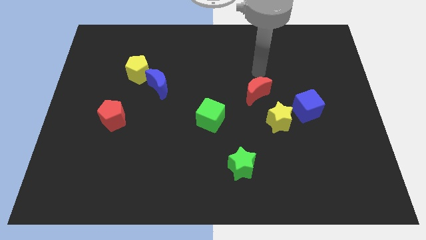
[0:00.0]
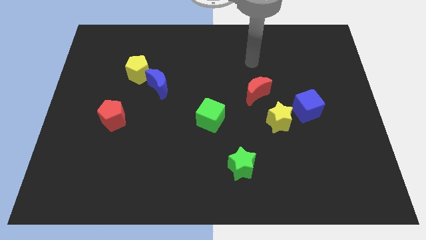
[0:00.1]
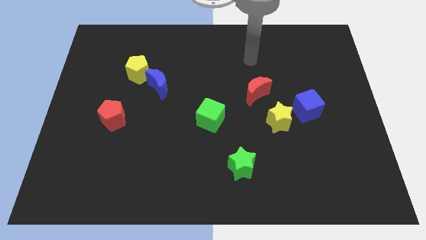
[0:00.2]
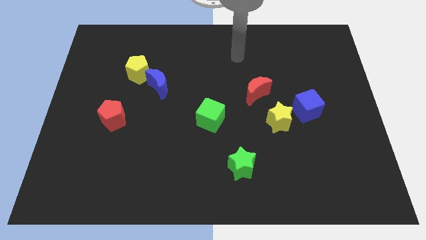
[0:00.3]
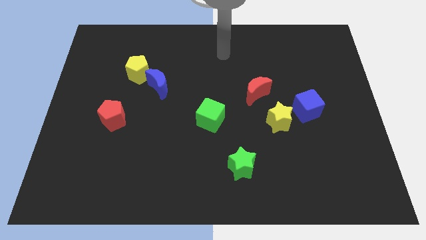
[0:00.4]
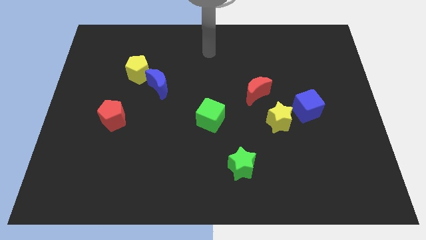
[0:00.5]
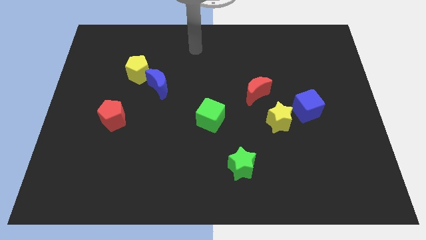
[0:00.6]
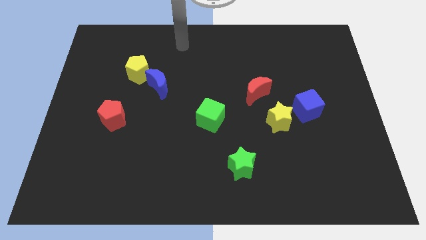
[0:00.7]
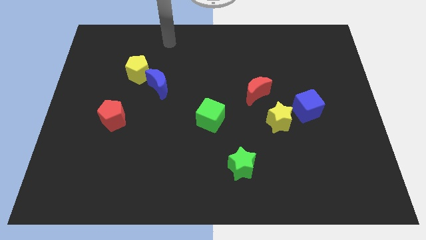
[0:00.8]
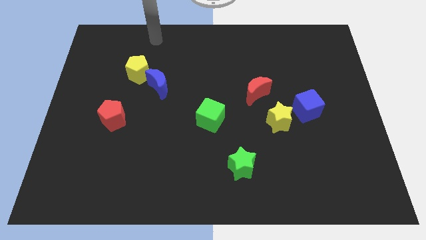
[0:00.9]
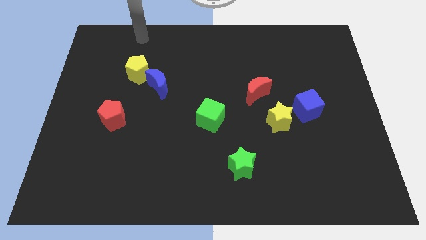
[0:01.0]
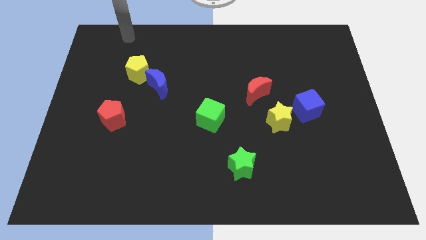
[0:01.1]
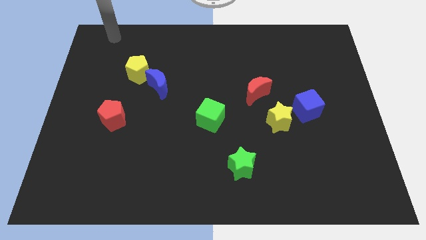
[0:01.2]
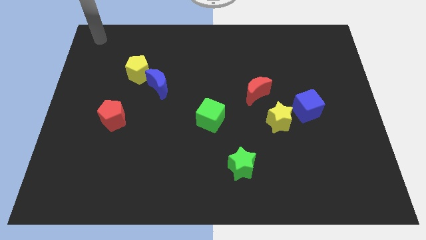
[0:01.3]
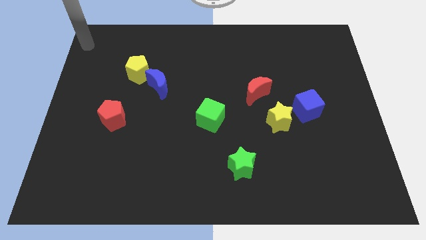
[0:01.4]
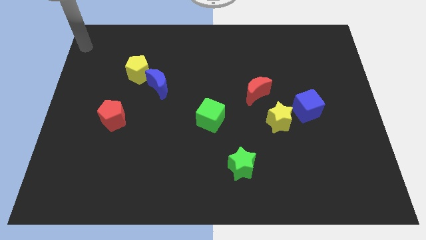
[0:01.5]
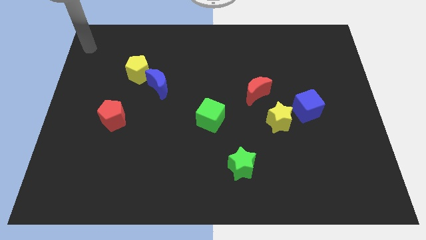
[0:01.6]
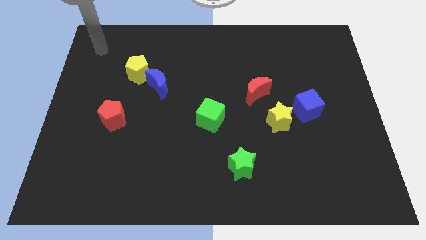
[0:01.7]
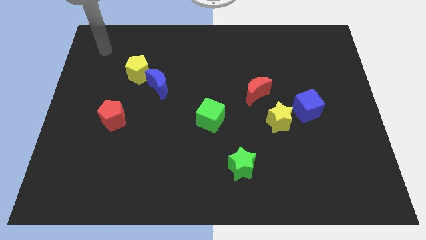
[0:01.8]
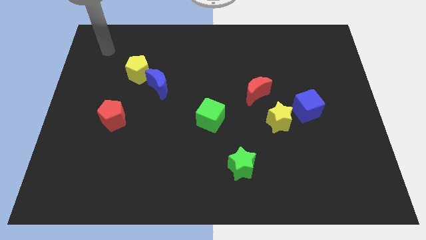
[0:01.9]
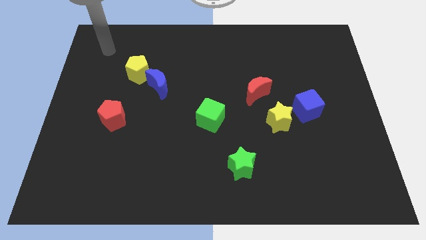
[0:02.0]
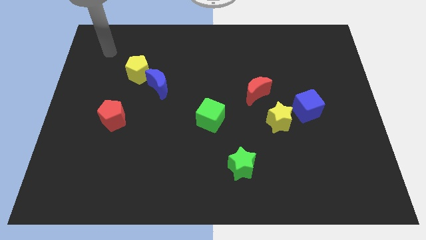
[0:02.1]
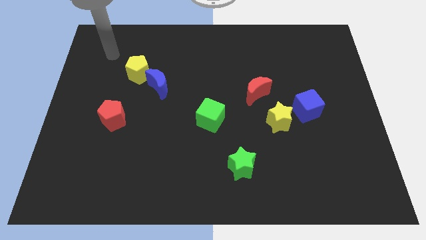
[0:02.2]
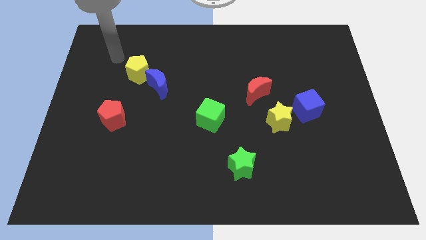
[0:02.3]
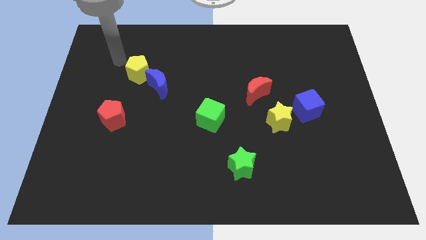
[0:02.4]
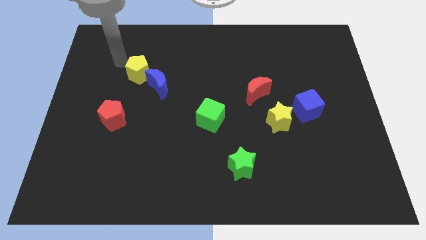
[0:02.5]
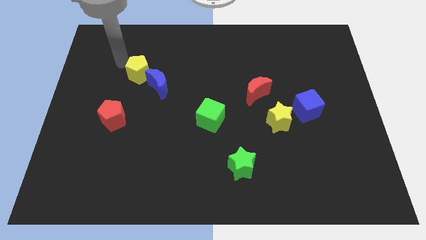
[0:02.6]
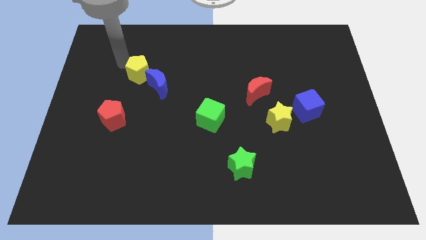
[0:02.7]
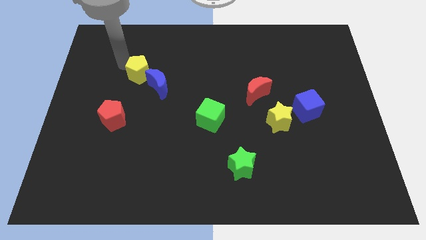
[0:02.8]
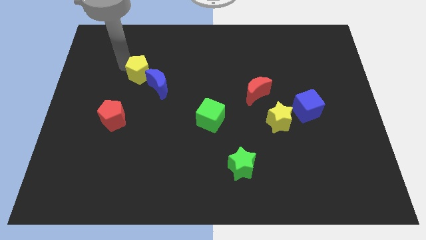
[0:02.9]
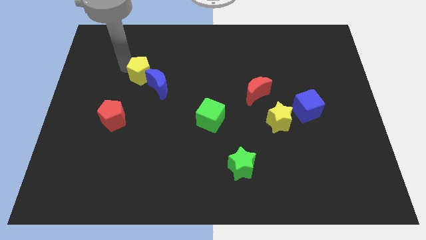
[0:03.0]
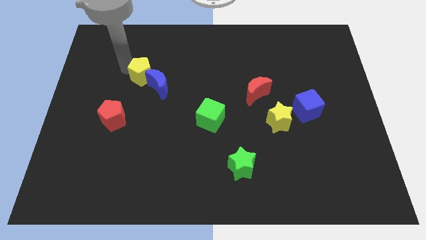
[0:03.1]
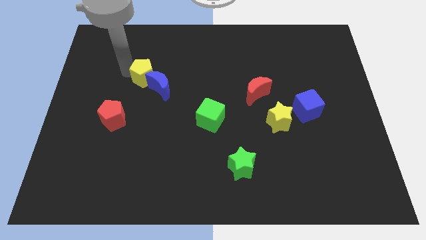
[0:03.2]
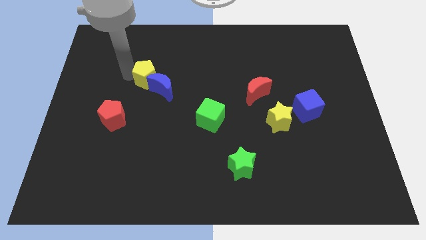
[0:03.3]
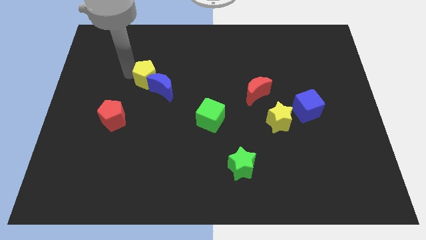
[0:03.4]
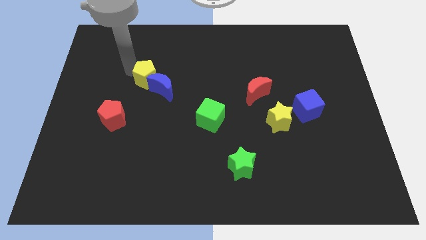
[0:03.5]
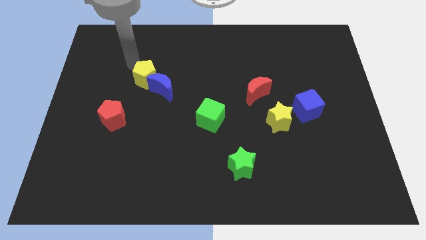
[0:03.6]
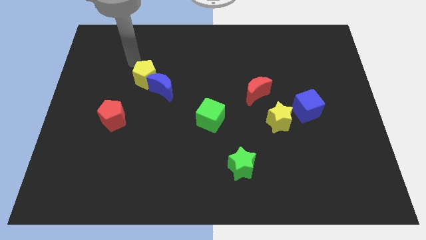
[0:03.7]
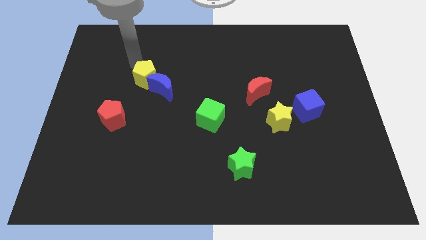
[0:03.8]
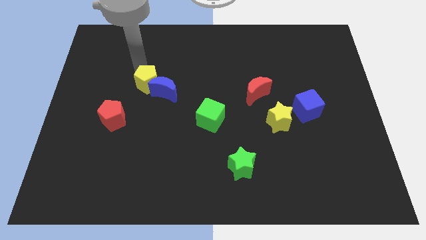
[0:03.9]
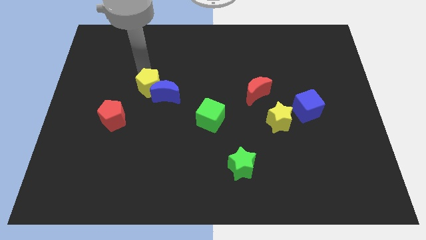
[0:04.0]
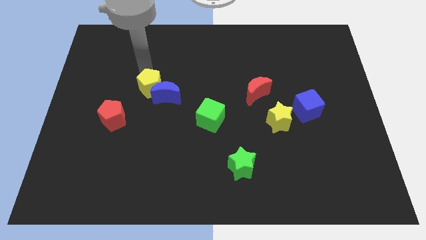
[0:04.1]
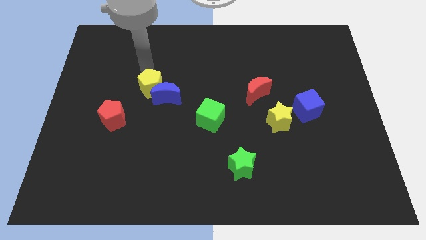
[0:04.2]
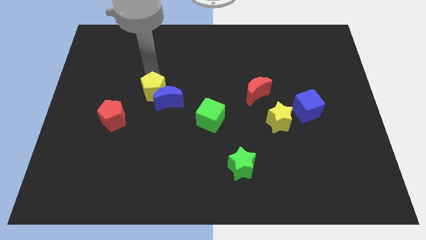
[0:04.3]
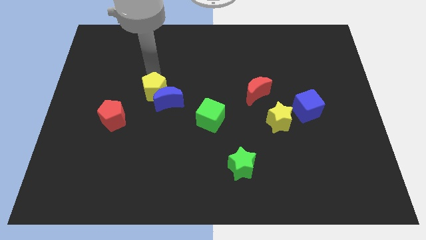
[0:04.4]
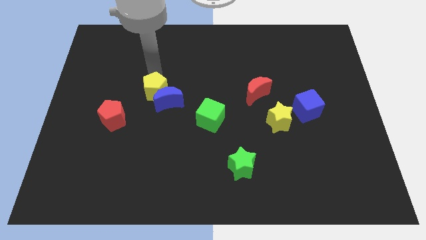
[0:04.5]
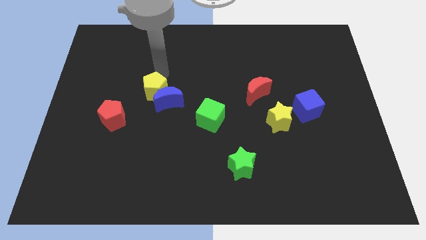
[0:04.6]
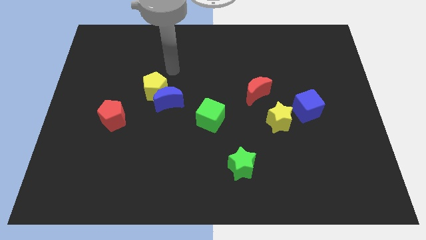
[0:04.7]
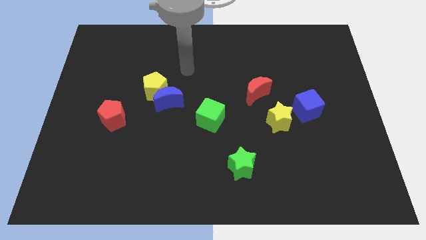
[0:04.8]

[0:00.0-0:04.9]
push the yellow pentagon along with blue crescent towards the center of the board

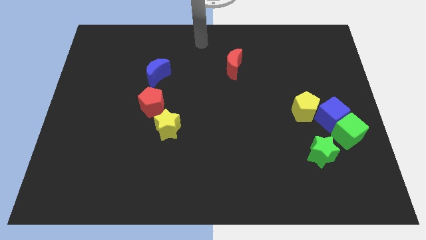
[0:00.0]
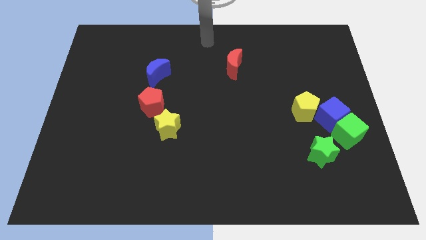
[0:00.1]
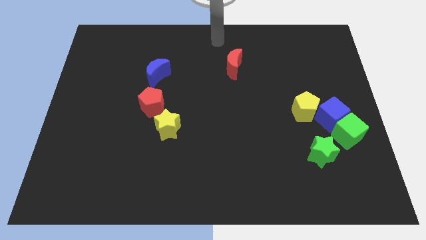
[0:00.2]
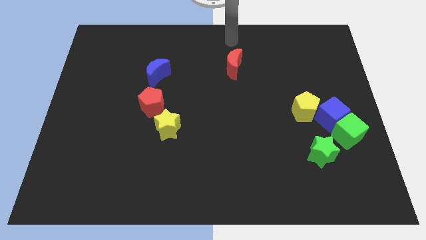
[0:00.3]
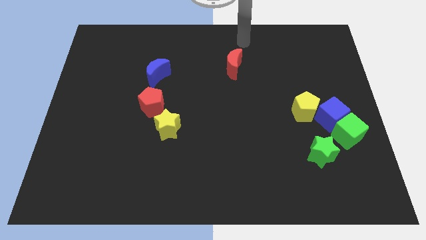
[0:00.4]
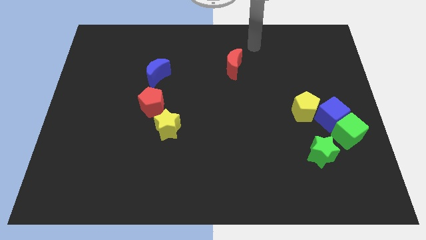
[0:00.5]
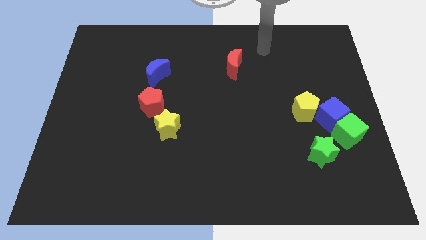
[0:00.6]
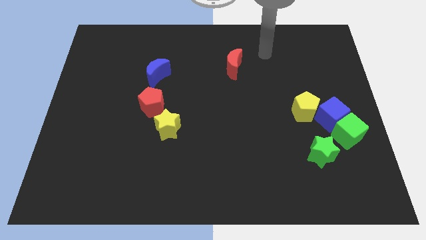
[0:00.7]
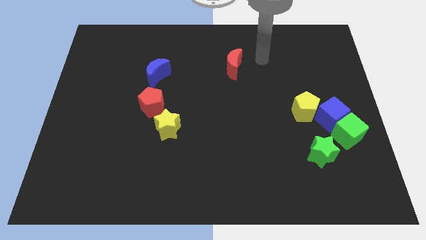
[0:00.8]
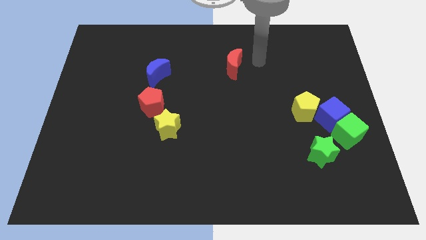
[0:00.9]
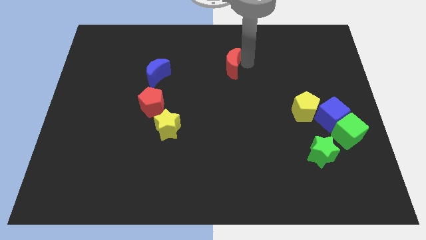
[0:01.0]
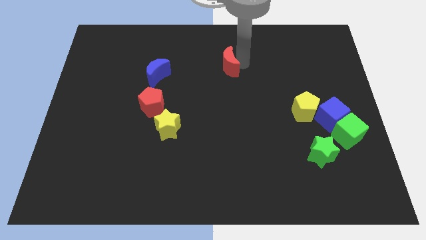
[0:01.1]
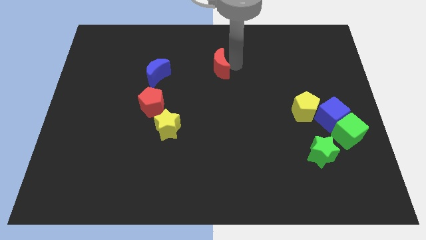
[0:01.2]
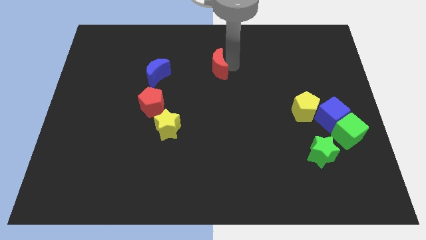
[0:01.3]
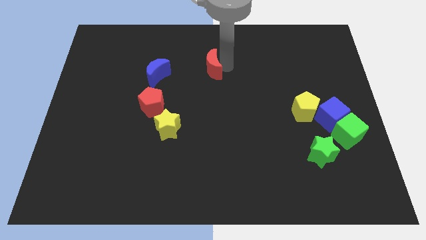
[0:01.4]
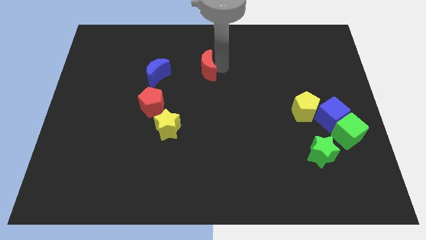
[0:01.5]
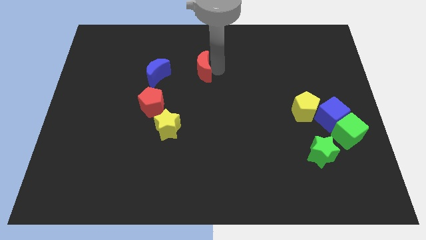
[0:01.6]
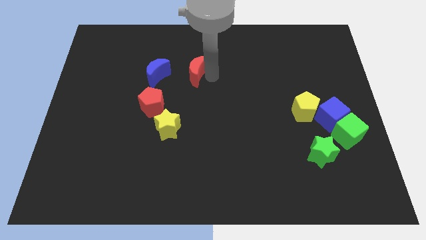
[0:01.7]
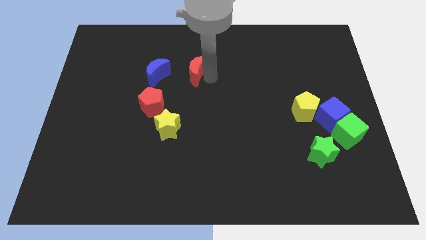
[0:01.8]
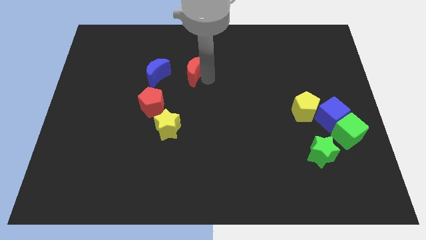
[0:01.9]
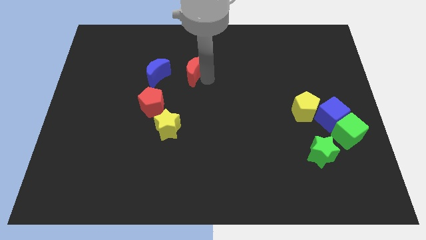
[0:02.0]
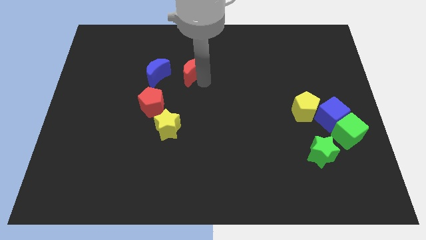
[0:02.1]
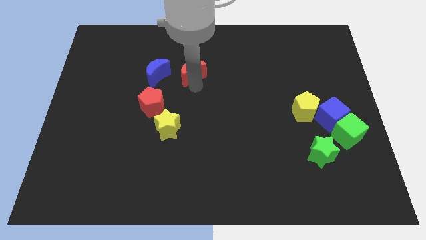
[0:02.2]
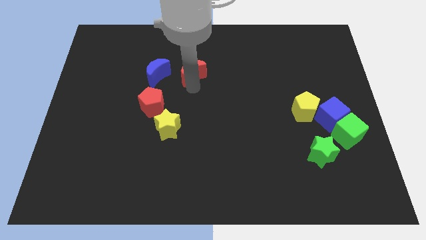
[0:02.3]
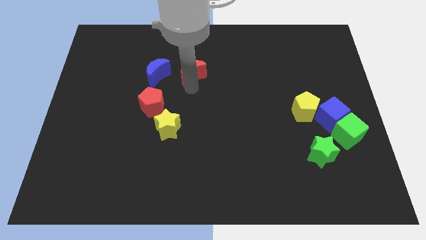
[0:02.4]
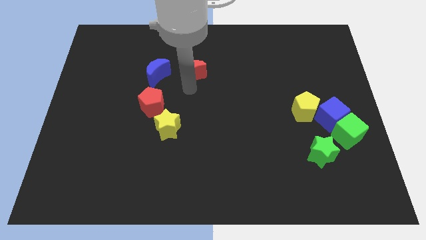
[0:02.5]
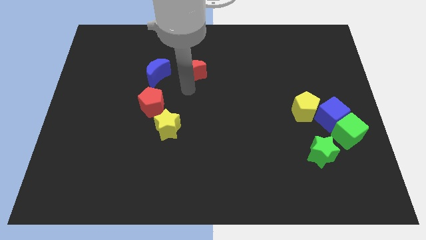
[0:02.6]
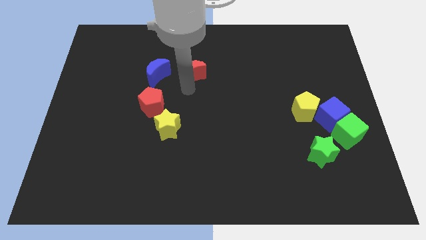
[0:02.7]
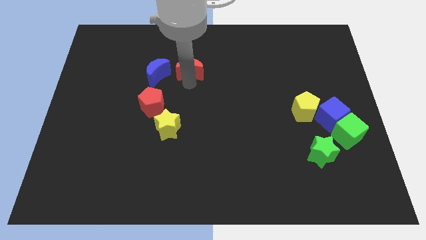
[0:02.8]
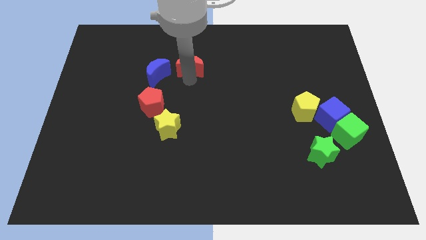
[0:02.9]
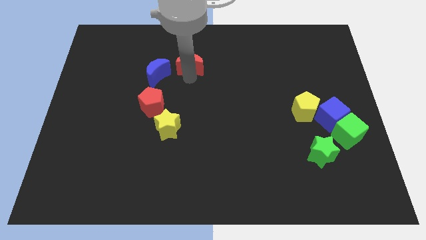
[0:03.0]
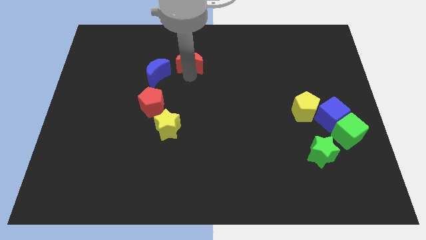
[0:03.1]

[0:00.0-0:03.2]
move the red crescent towards the right of the blue crescent

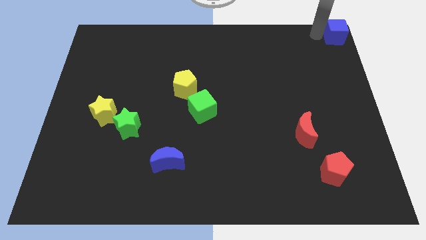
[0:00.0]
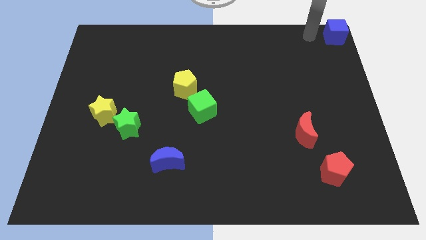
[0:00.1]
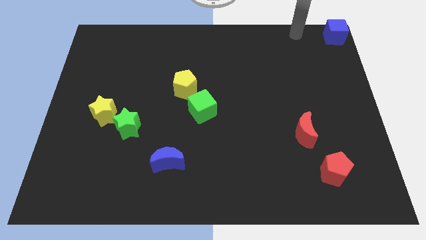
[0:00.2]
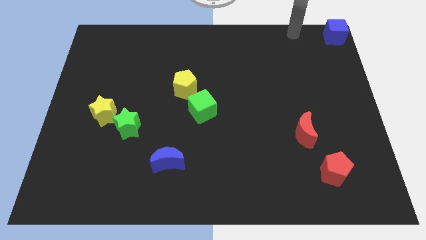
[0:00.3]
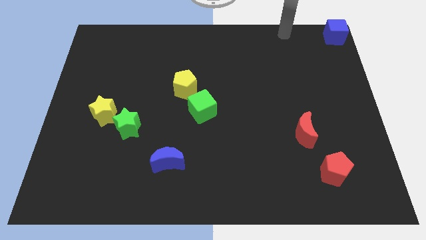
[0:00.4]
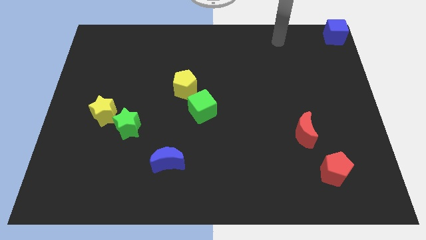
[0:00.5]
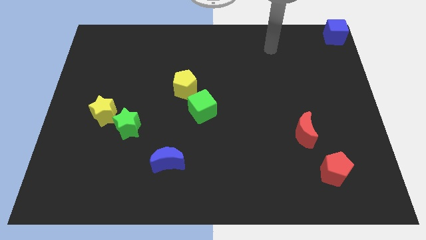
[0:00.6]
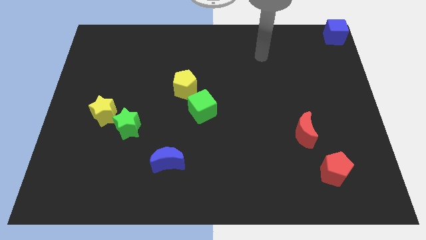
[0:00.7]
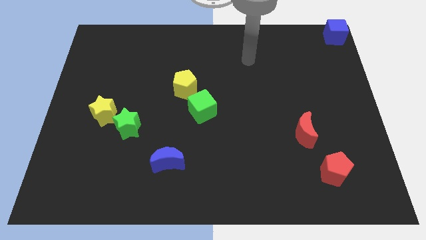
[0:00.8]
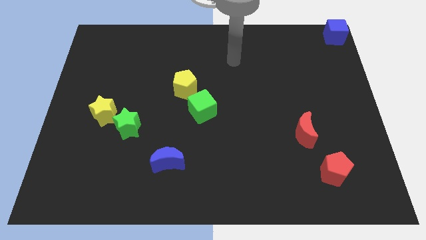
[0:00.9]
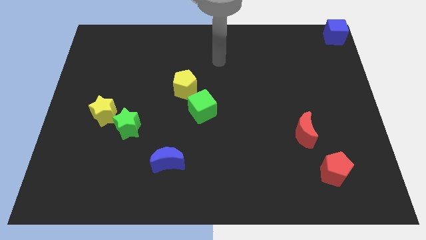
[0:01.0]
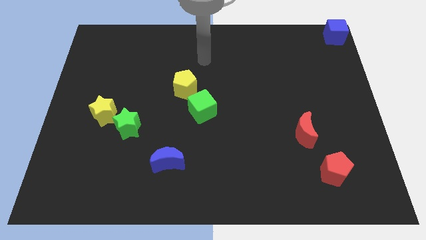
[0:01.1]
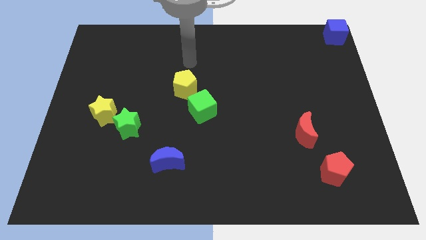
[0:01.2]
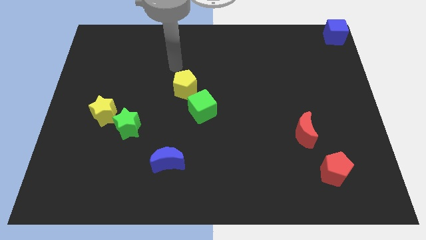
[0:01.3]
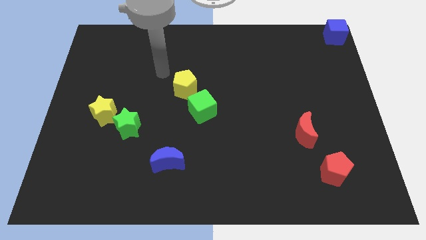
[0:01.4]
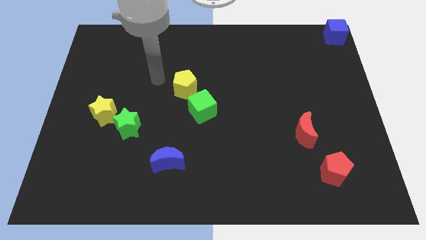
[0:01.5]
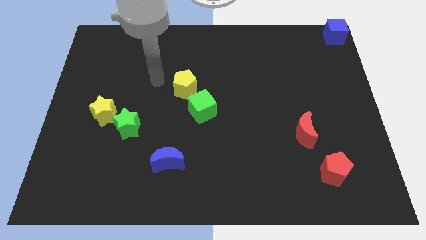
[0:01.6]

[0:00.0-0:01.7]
move your hand away from the blue cube
